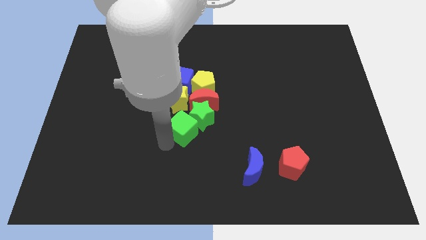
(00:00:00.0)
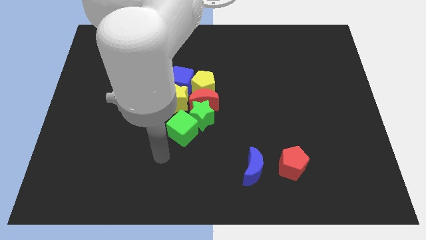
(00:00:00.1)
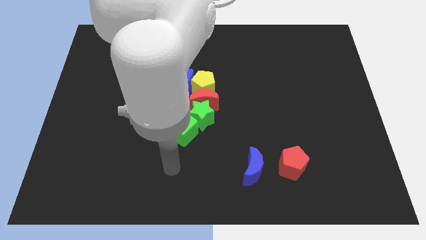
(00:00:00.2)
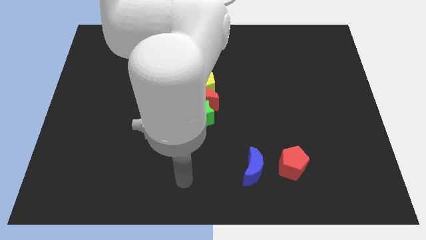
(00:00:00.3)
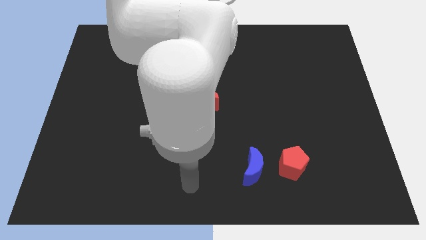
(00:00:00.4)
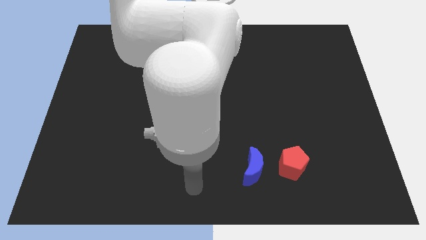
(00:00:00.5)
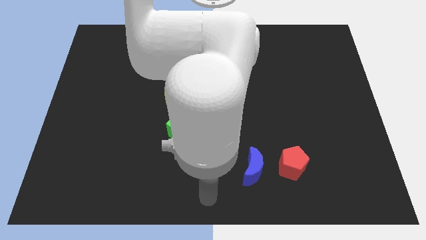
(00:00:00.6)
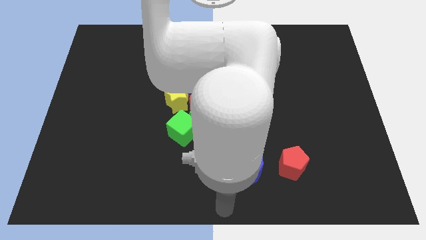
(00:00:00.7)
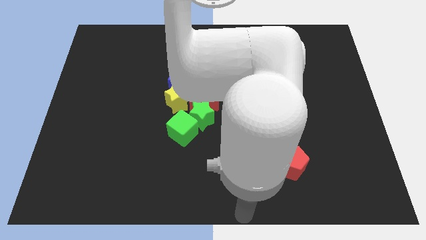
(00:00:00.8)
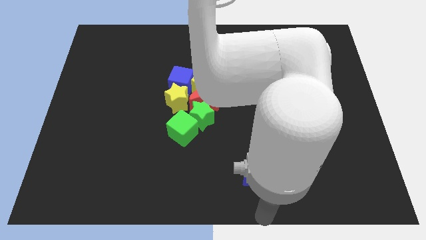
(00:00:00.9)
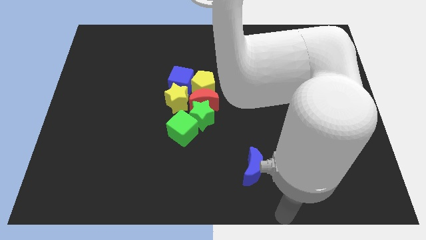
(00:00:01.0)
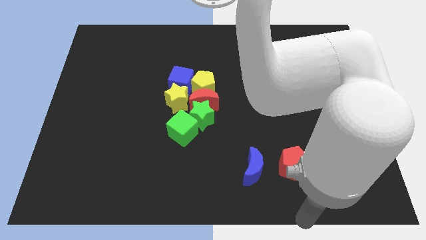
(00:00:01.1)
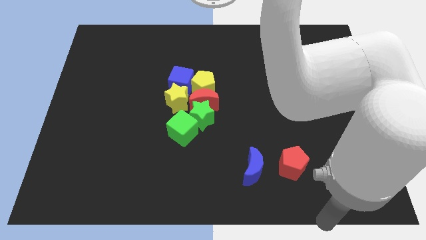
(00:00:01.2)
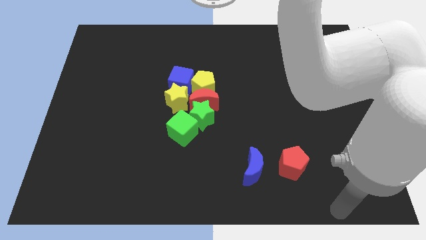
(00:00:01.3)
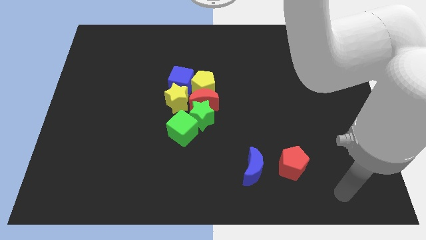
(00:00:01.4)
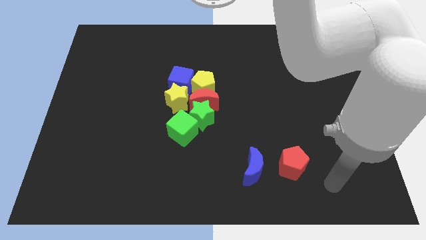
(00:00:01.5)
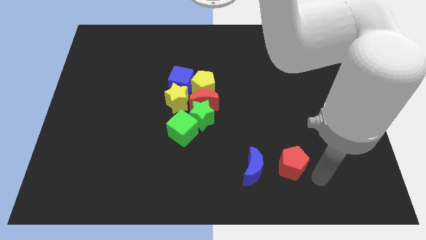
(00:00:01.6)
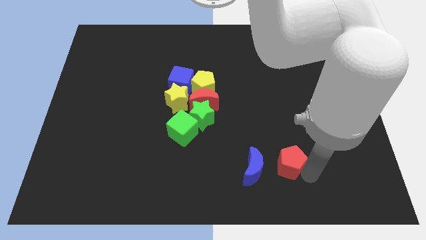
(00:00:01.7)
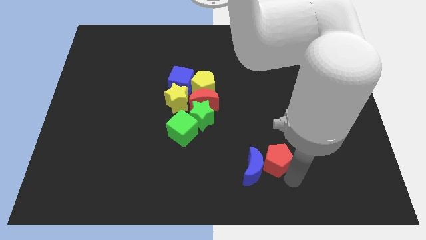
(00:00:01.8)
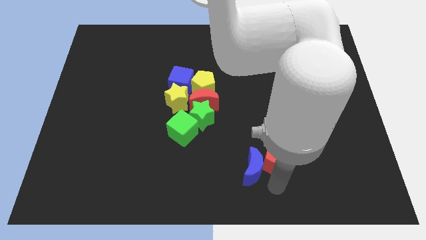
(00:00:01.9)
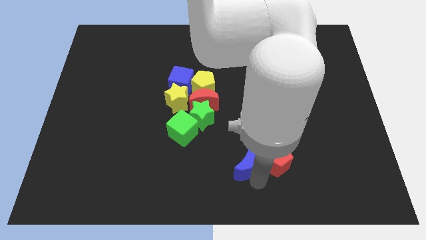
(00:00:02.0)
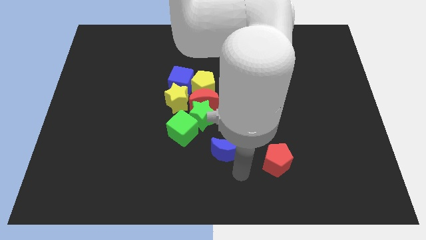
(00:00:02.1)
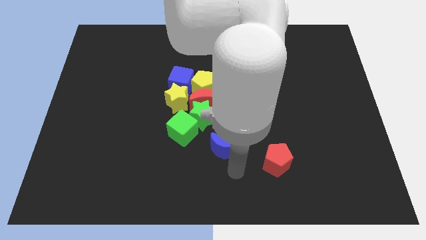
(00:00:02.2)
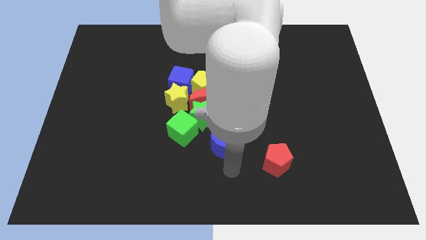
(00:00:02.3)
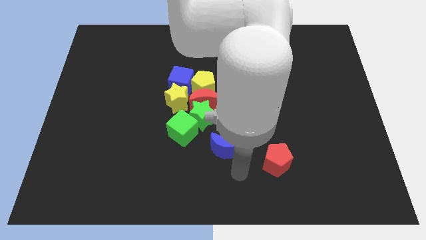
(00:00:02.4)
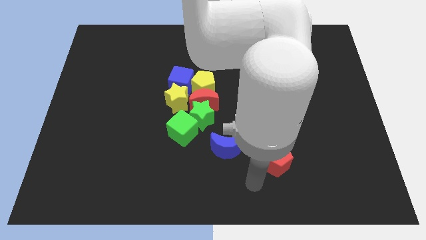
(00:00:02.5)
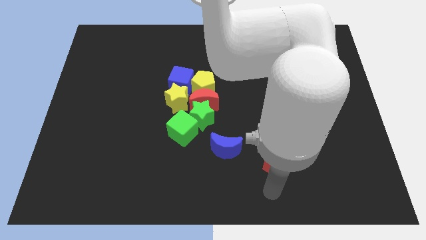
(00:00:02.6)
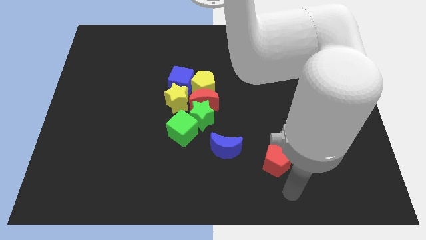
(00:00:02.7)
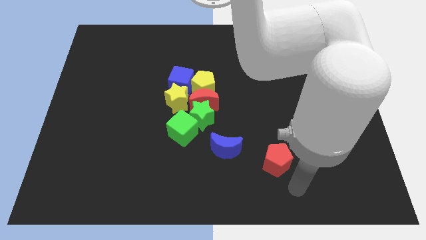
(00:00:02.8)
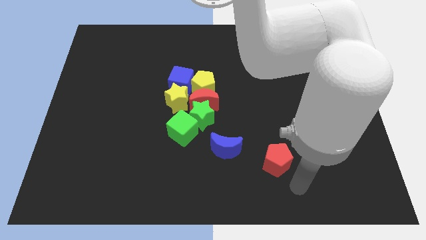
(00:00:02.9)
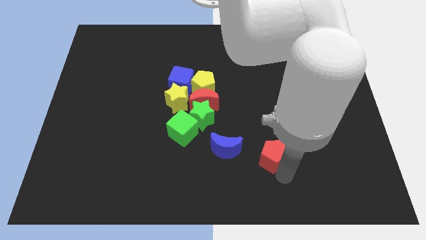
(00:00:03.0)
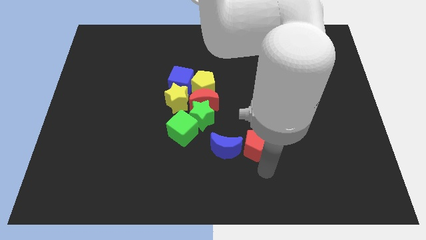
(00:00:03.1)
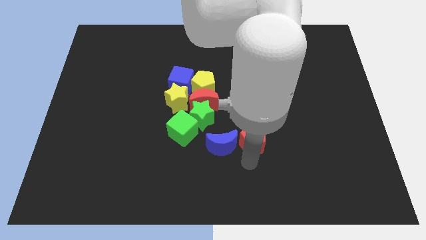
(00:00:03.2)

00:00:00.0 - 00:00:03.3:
push the blue crescent and red pentagon towards the green star

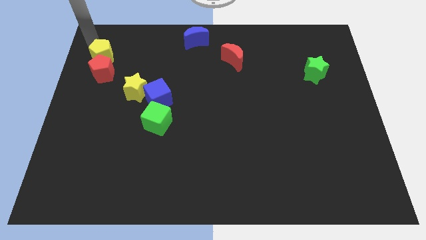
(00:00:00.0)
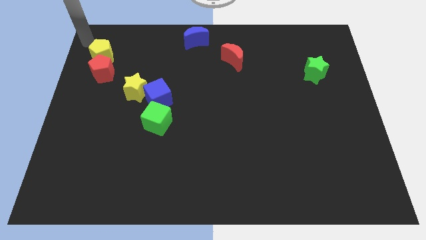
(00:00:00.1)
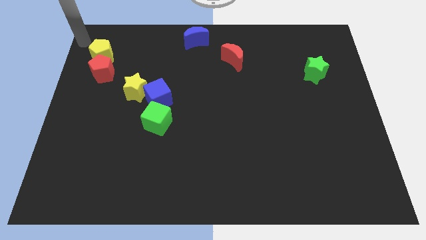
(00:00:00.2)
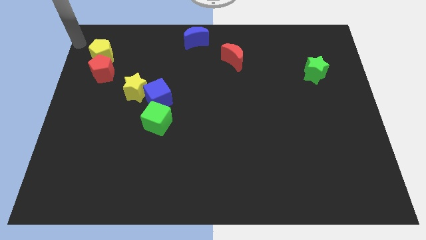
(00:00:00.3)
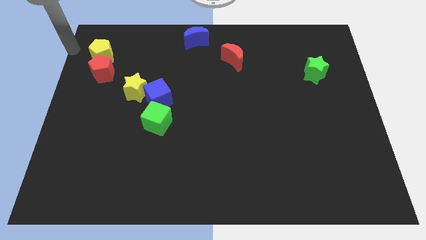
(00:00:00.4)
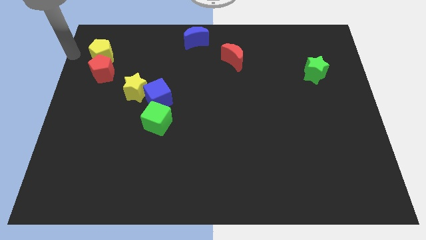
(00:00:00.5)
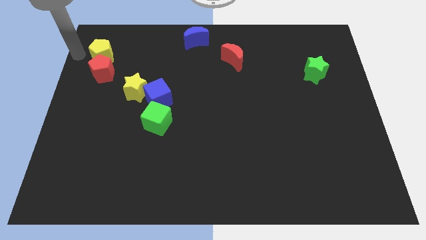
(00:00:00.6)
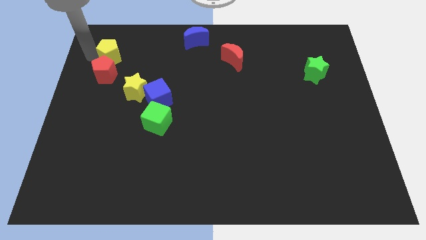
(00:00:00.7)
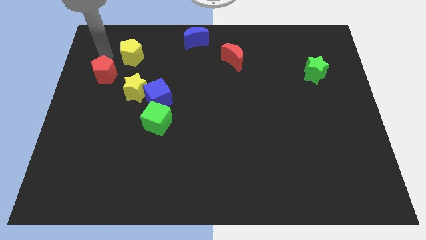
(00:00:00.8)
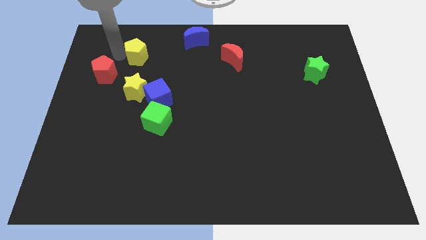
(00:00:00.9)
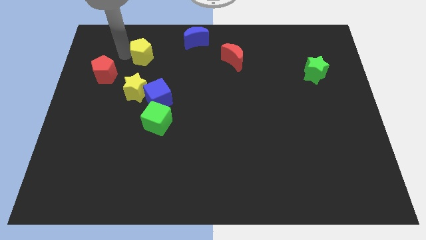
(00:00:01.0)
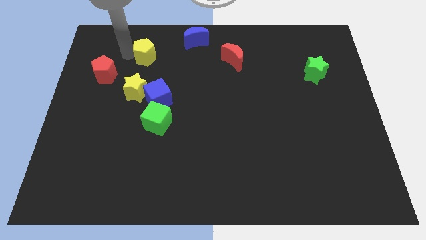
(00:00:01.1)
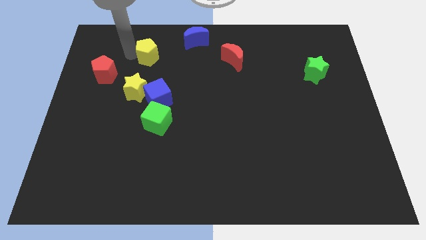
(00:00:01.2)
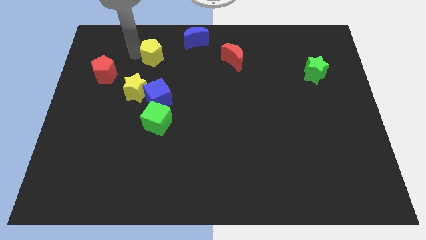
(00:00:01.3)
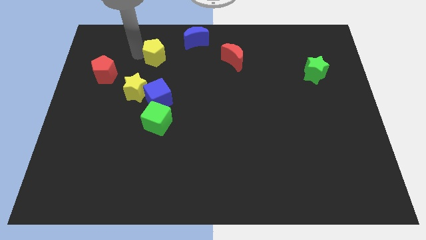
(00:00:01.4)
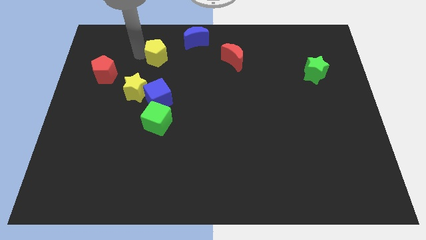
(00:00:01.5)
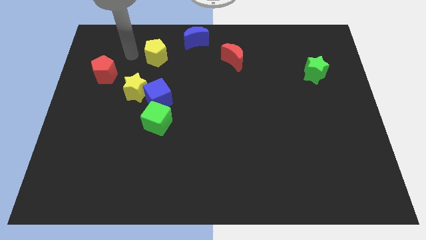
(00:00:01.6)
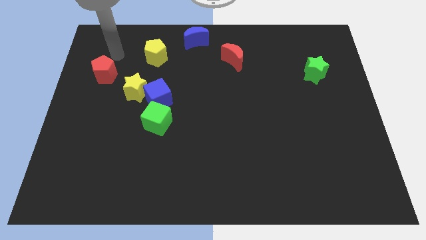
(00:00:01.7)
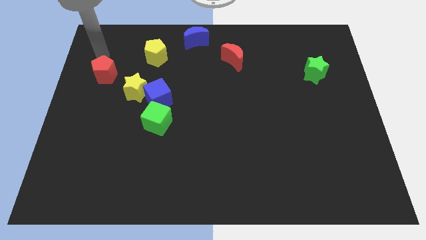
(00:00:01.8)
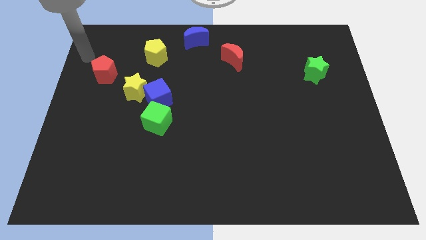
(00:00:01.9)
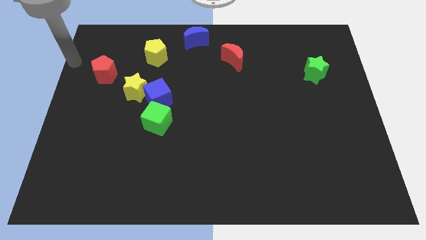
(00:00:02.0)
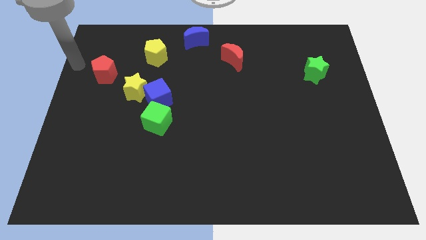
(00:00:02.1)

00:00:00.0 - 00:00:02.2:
slide the yellow pentagon towards the bottom left of the blue crescent

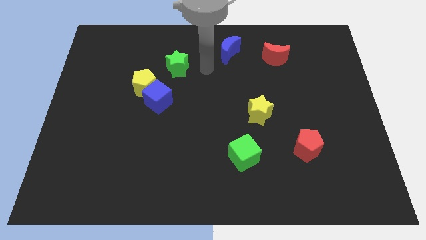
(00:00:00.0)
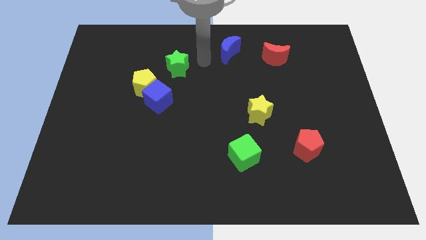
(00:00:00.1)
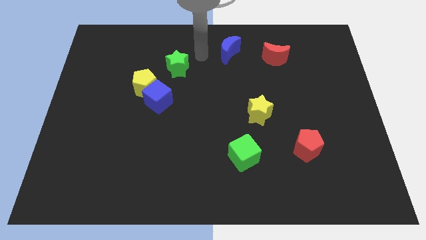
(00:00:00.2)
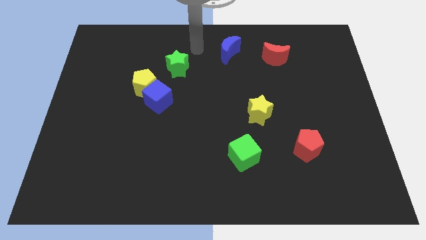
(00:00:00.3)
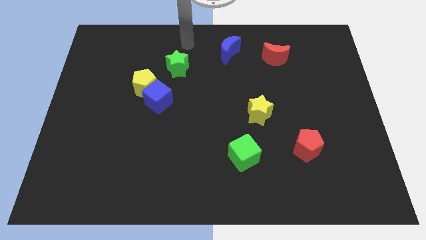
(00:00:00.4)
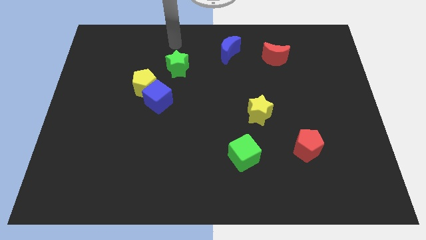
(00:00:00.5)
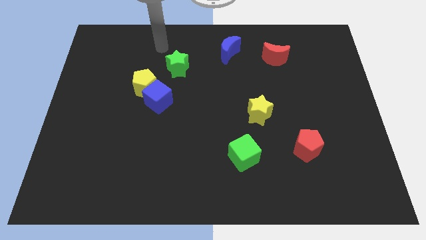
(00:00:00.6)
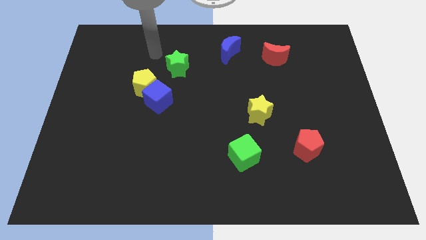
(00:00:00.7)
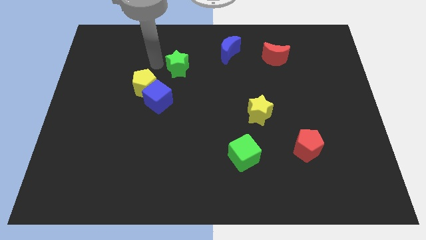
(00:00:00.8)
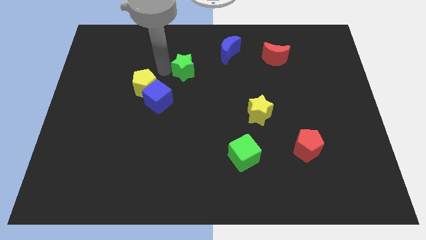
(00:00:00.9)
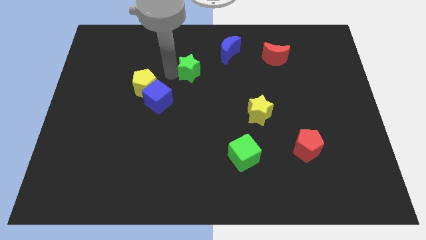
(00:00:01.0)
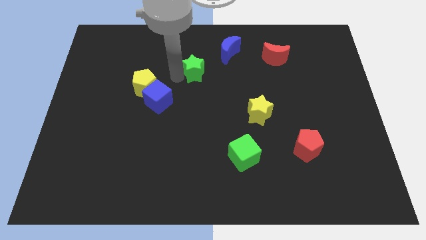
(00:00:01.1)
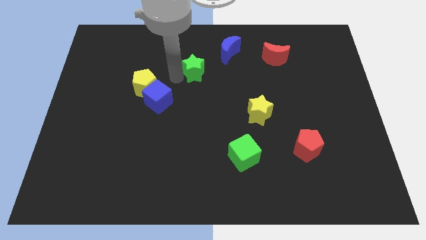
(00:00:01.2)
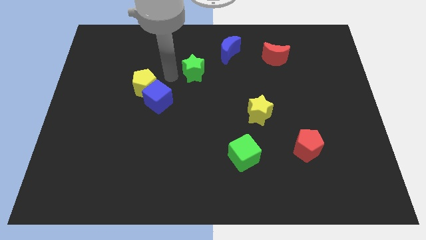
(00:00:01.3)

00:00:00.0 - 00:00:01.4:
place green star to the bottom left of the blue moon

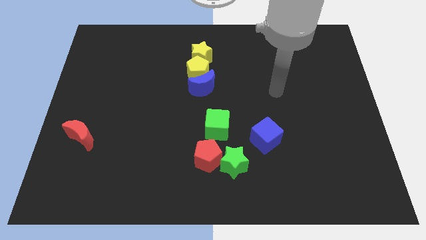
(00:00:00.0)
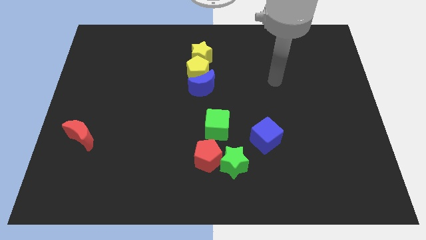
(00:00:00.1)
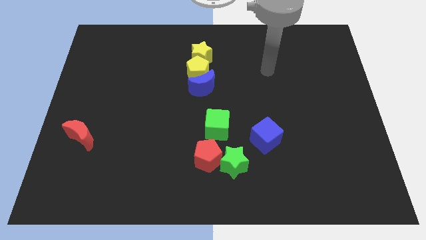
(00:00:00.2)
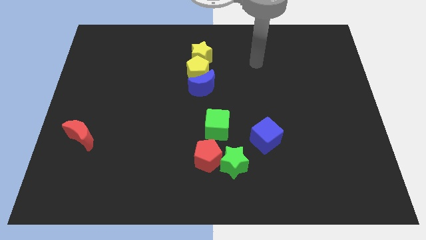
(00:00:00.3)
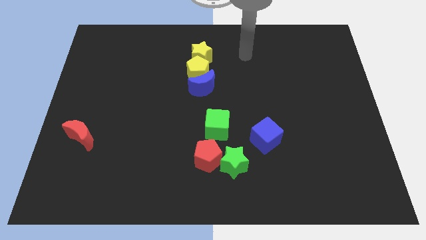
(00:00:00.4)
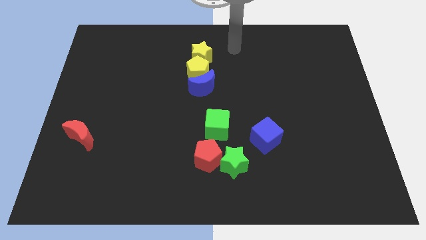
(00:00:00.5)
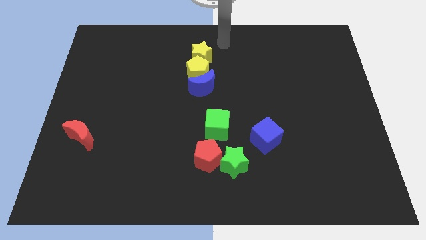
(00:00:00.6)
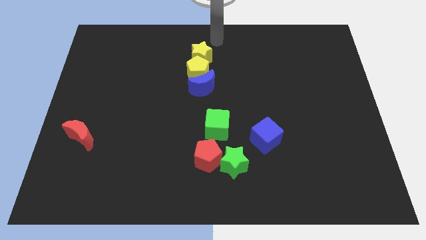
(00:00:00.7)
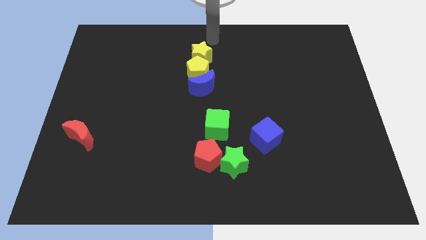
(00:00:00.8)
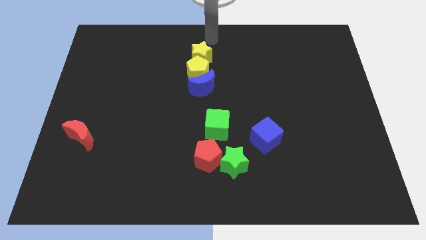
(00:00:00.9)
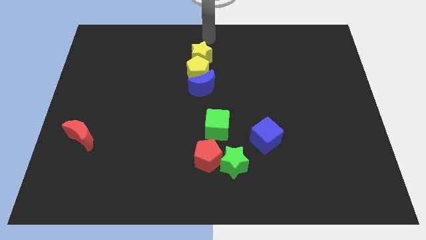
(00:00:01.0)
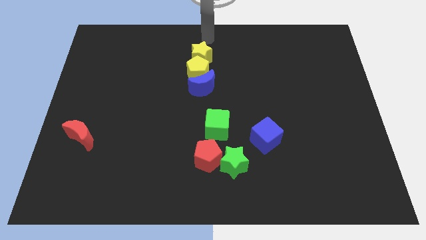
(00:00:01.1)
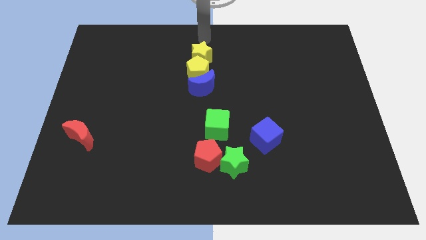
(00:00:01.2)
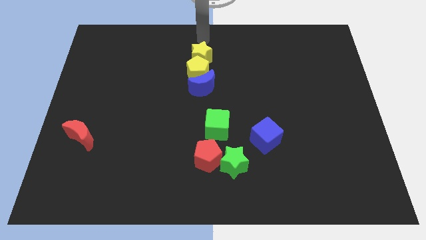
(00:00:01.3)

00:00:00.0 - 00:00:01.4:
point your arm at the top of the yellow star

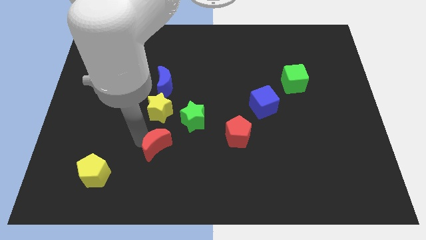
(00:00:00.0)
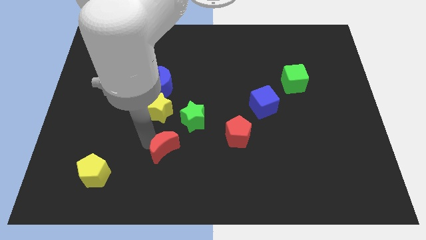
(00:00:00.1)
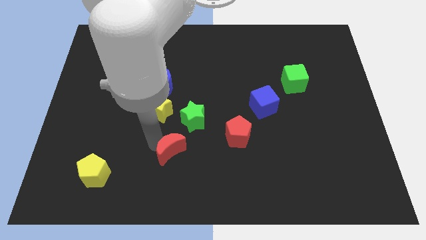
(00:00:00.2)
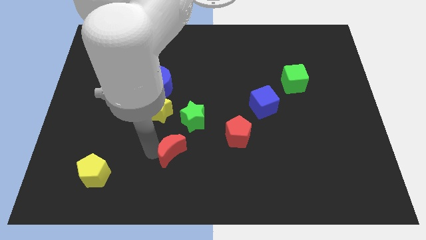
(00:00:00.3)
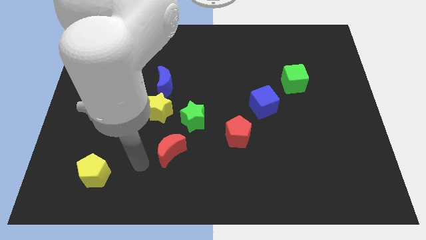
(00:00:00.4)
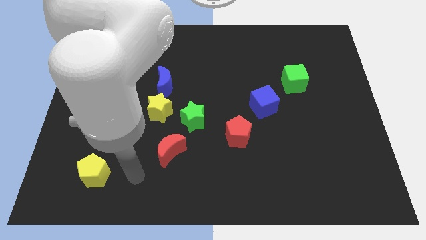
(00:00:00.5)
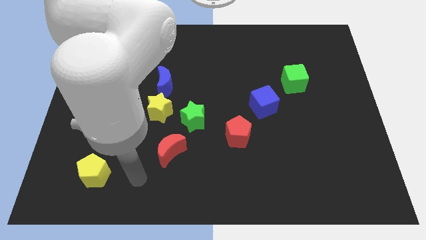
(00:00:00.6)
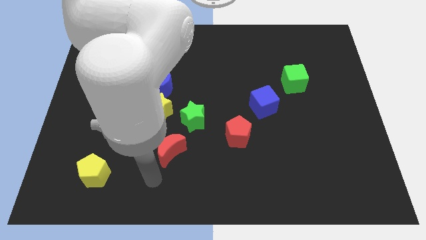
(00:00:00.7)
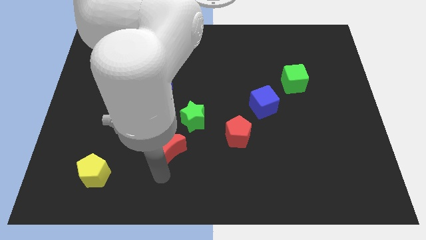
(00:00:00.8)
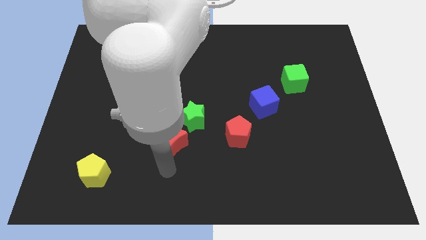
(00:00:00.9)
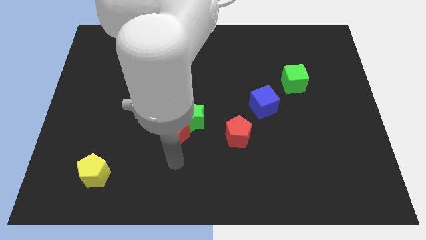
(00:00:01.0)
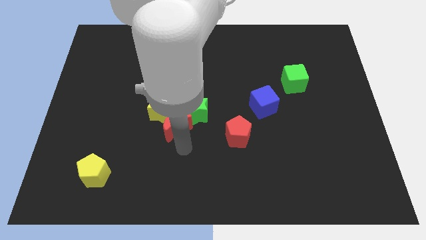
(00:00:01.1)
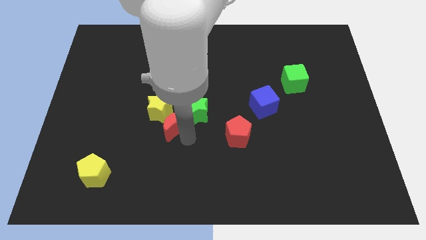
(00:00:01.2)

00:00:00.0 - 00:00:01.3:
push the red moon into the bottom of the green star
